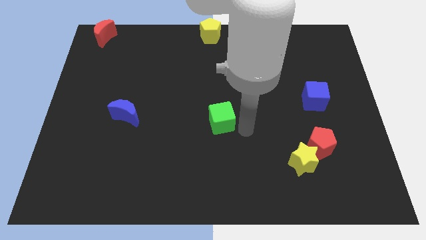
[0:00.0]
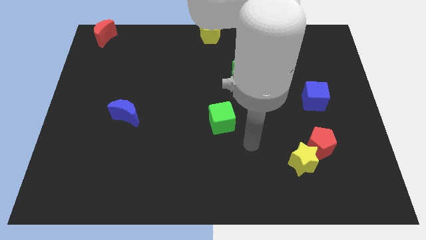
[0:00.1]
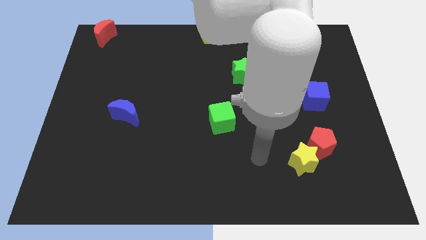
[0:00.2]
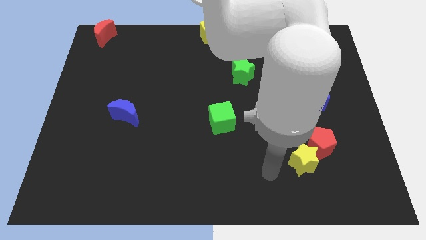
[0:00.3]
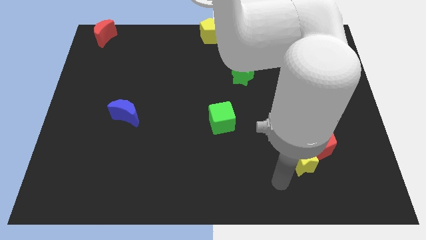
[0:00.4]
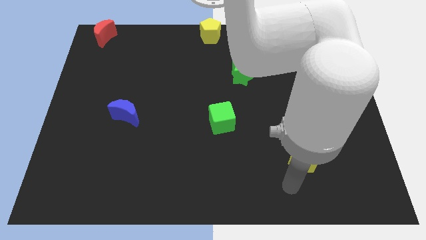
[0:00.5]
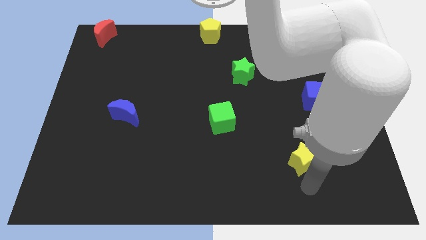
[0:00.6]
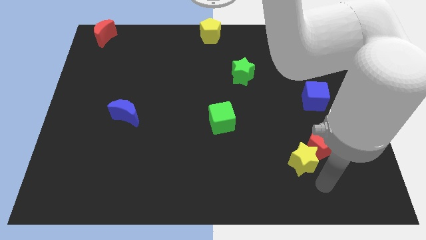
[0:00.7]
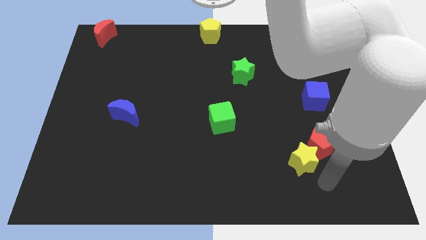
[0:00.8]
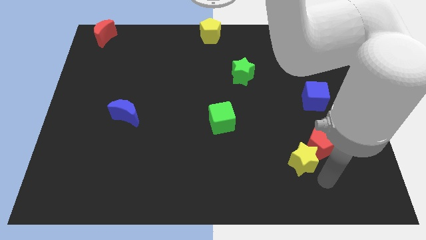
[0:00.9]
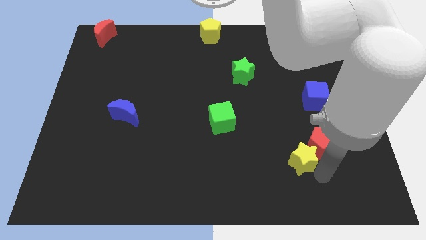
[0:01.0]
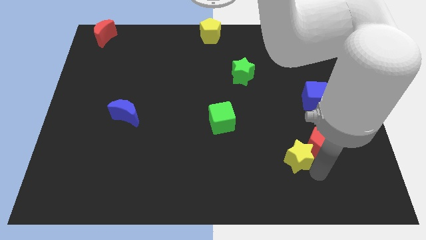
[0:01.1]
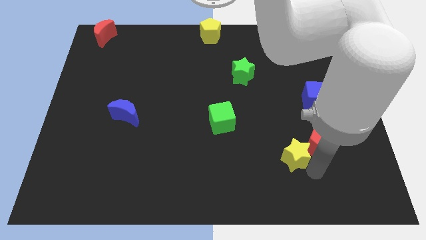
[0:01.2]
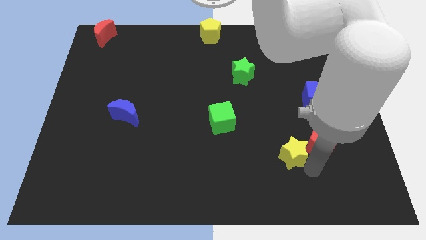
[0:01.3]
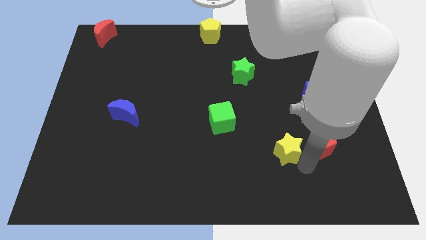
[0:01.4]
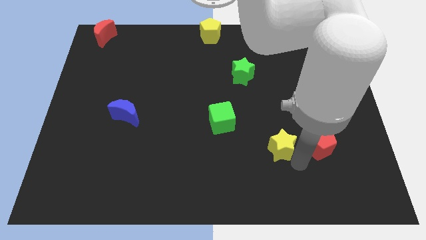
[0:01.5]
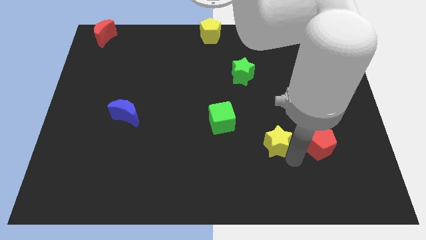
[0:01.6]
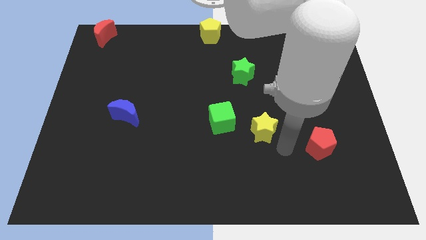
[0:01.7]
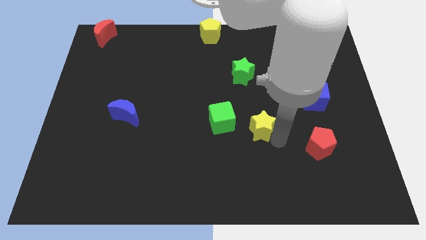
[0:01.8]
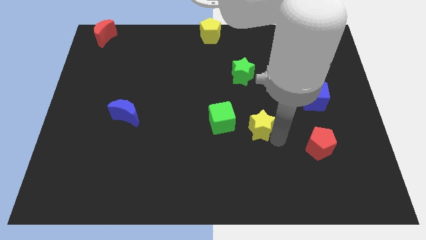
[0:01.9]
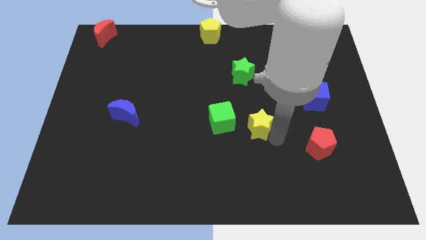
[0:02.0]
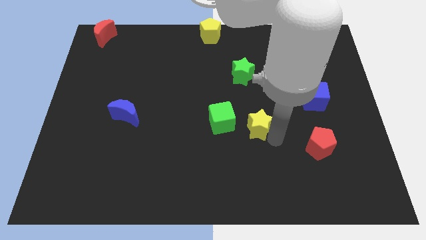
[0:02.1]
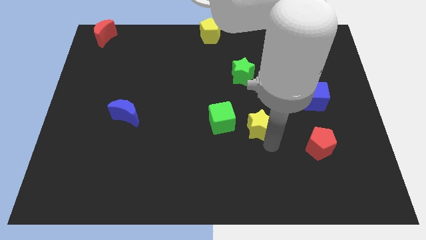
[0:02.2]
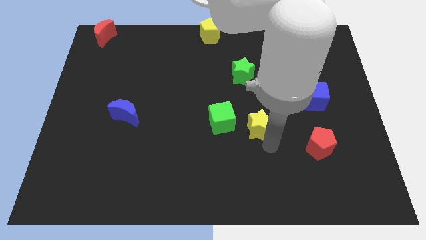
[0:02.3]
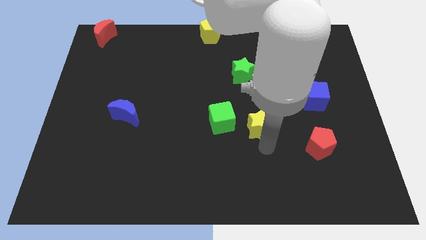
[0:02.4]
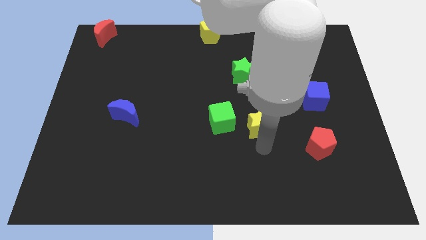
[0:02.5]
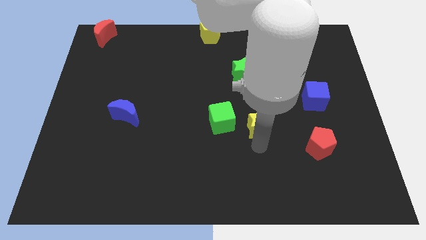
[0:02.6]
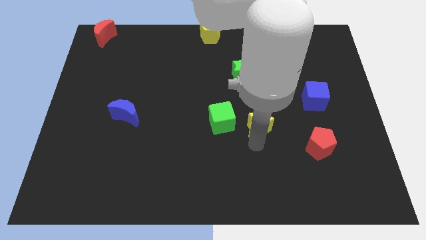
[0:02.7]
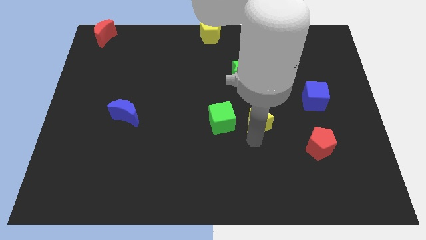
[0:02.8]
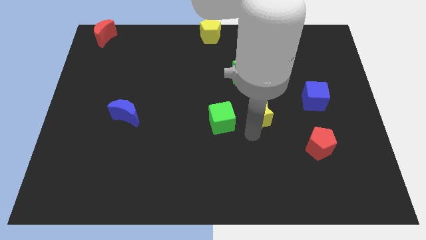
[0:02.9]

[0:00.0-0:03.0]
place the yellow star to the right of the green cube

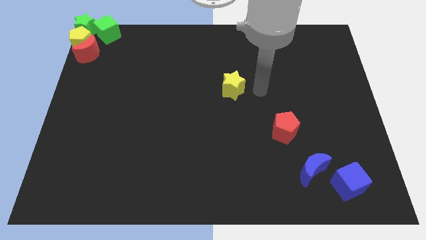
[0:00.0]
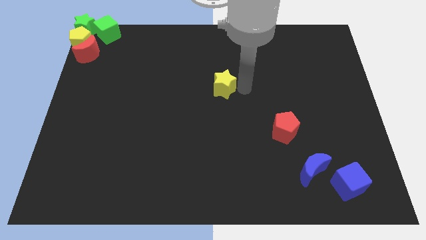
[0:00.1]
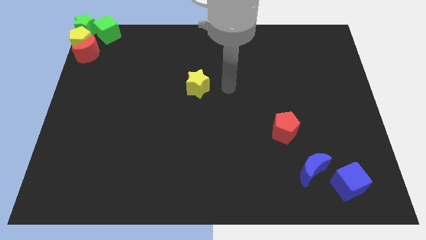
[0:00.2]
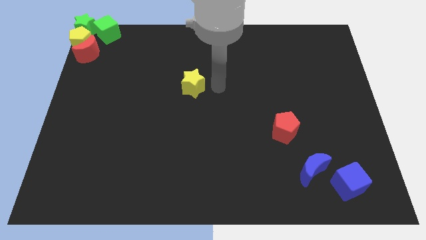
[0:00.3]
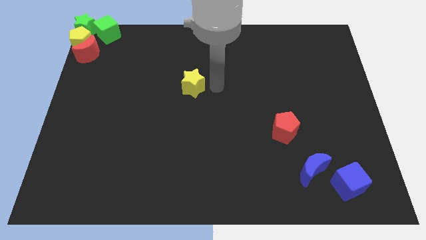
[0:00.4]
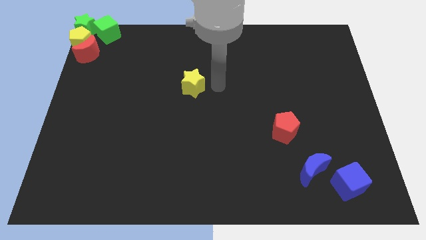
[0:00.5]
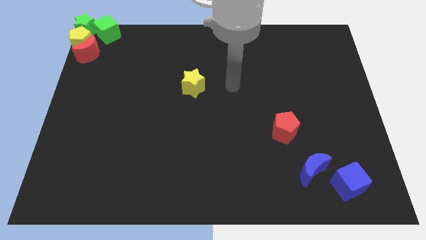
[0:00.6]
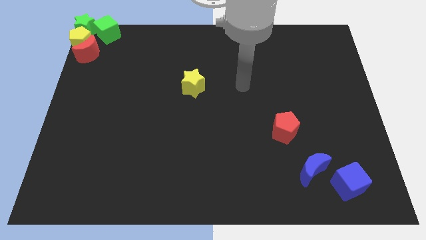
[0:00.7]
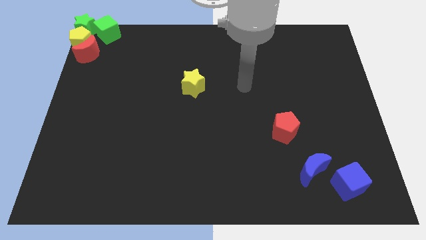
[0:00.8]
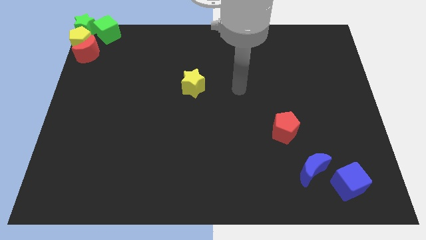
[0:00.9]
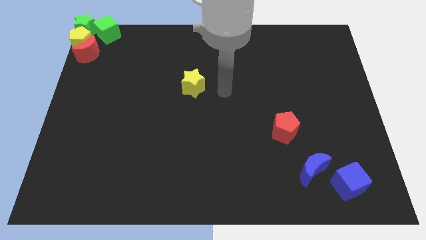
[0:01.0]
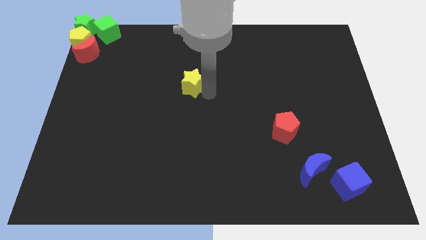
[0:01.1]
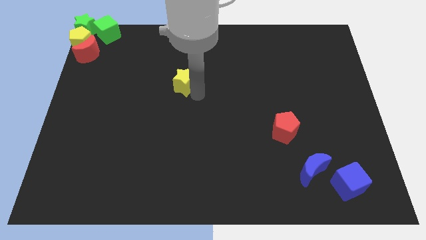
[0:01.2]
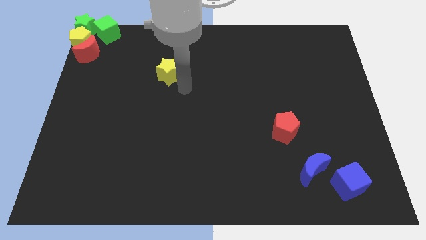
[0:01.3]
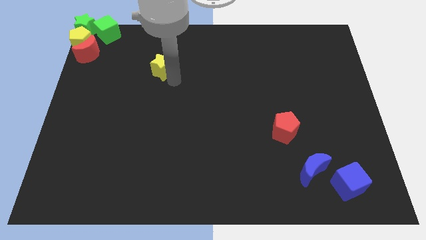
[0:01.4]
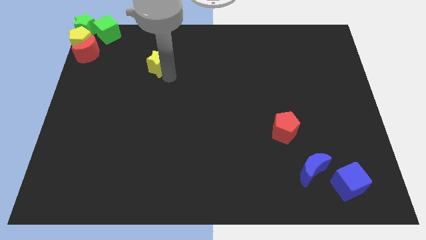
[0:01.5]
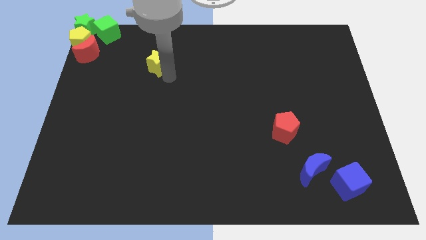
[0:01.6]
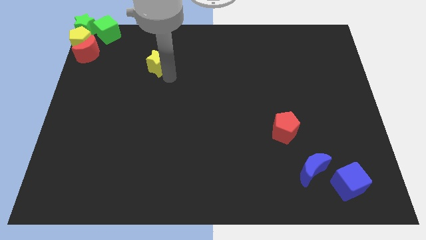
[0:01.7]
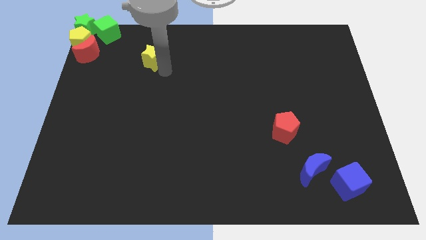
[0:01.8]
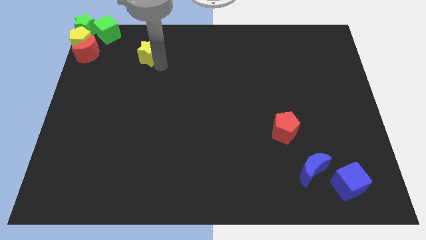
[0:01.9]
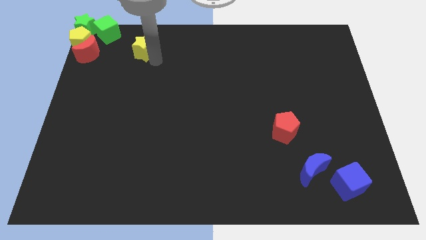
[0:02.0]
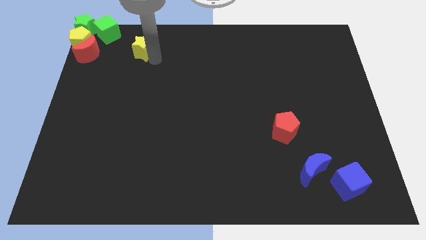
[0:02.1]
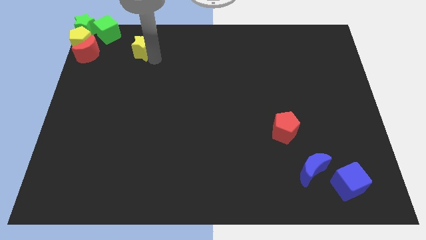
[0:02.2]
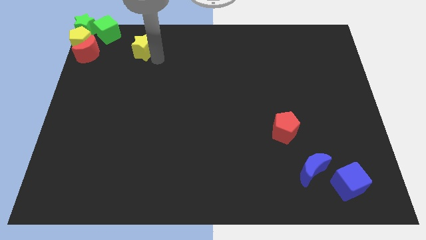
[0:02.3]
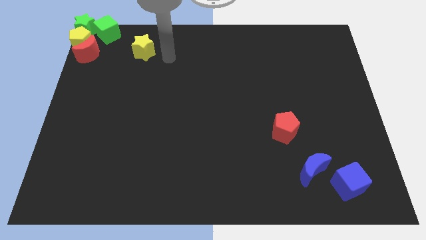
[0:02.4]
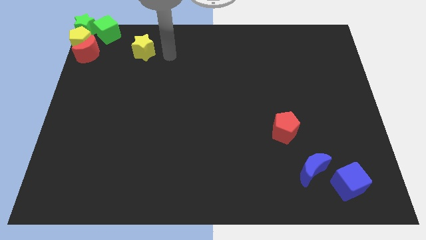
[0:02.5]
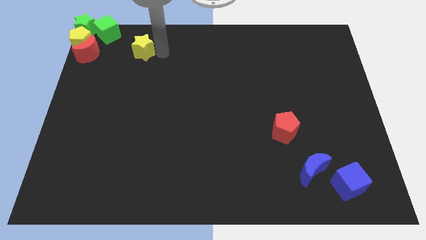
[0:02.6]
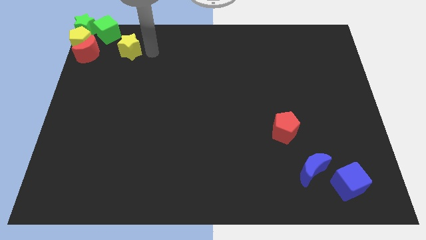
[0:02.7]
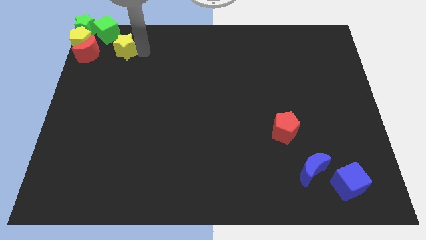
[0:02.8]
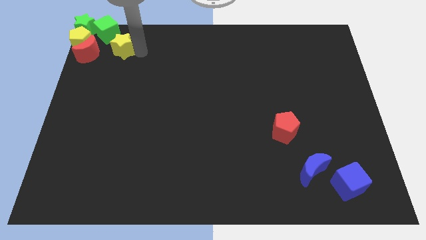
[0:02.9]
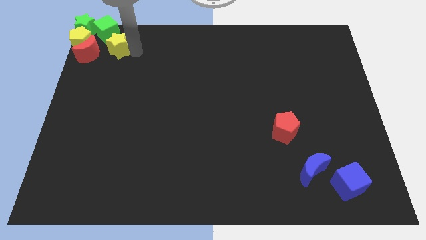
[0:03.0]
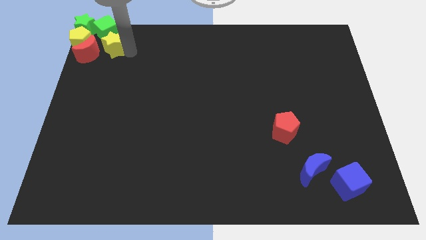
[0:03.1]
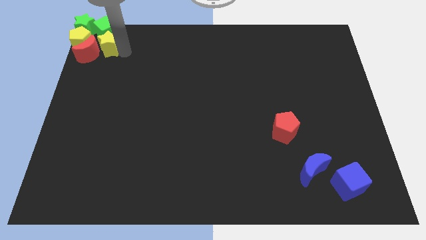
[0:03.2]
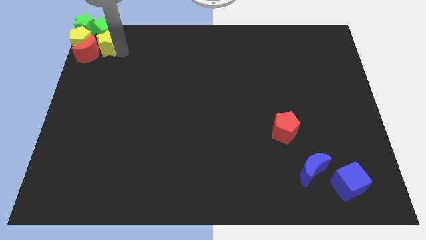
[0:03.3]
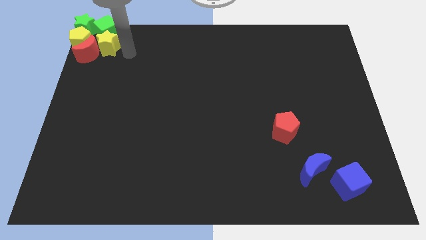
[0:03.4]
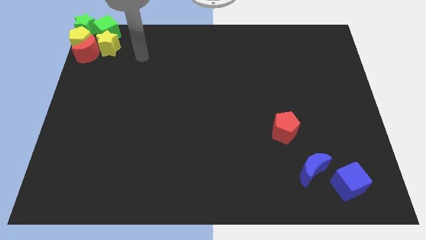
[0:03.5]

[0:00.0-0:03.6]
move the yellow star into the group of blocks

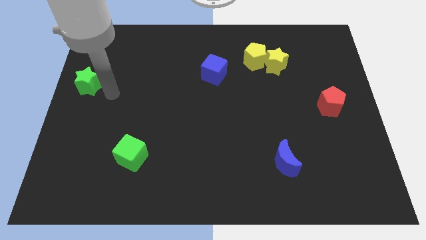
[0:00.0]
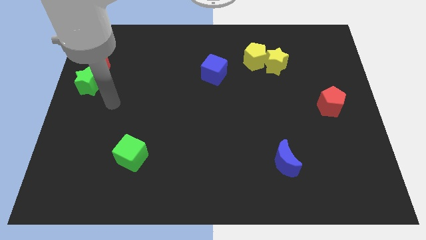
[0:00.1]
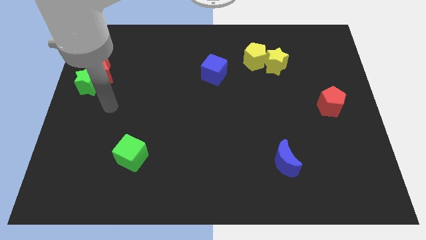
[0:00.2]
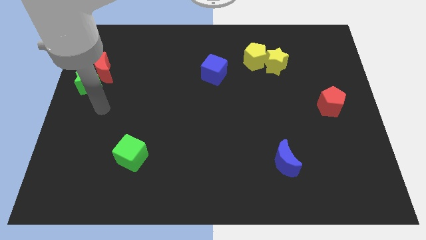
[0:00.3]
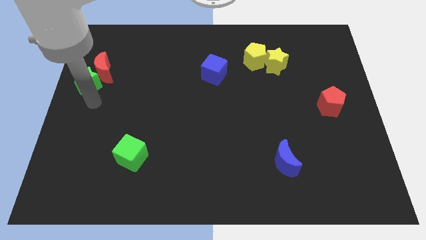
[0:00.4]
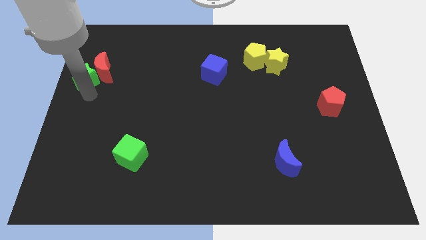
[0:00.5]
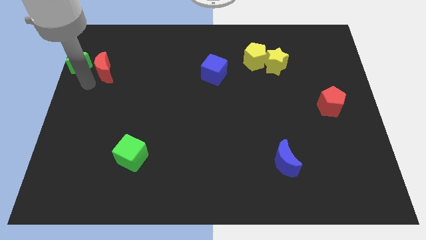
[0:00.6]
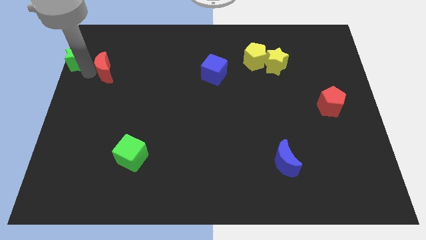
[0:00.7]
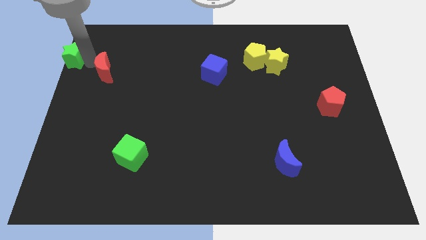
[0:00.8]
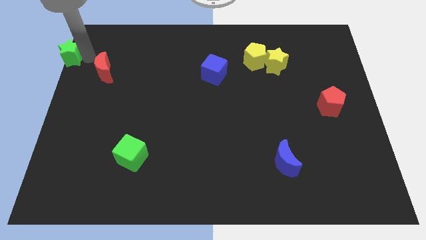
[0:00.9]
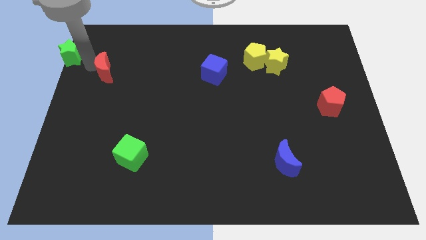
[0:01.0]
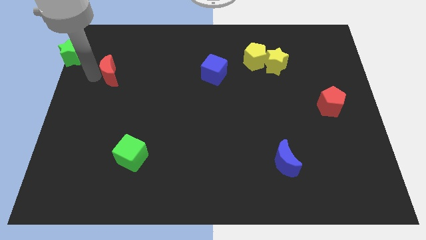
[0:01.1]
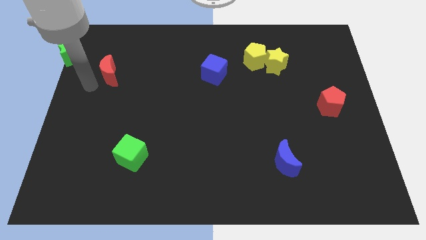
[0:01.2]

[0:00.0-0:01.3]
move the green star to the top left side of the board

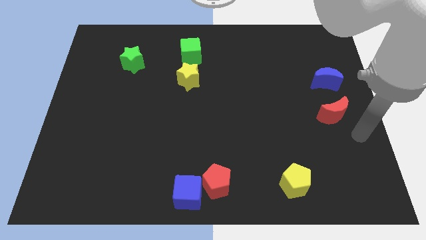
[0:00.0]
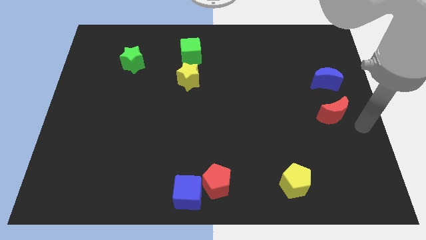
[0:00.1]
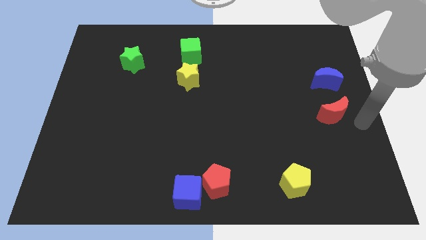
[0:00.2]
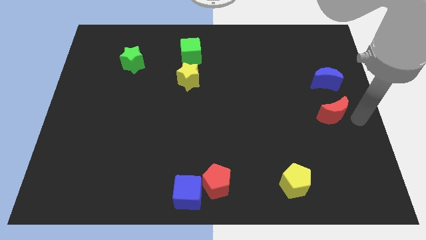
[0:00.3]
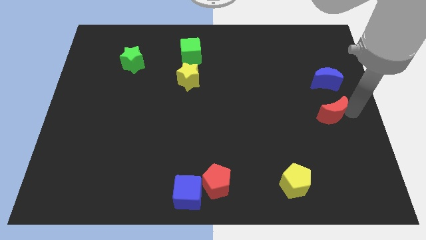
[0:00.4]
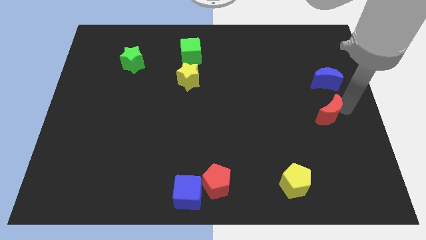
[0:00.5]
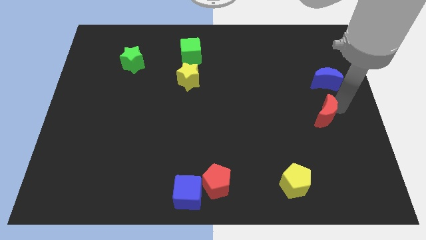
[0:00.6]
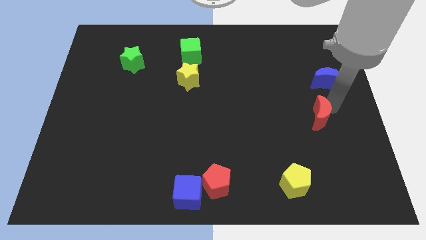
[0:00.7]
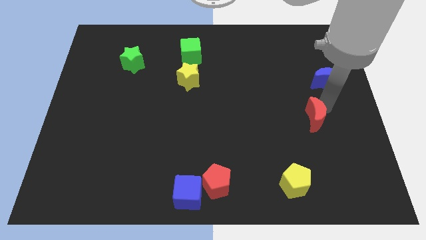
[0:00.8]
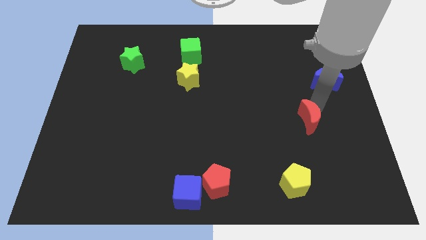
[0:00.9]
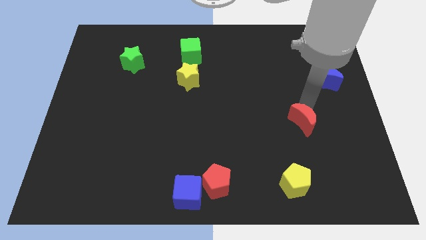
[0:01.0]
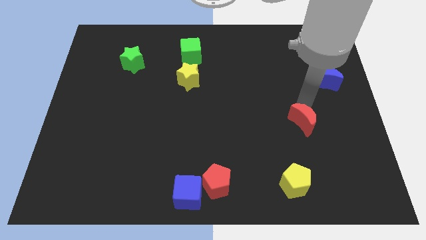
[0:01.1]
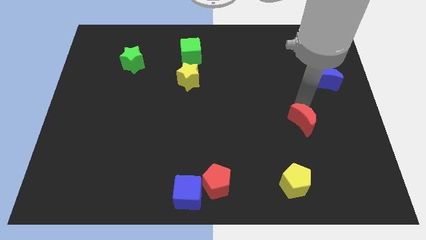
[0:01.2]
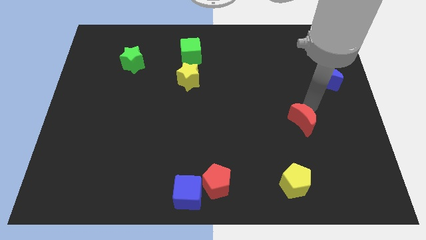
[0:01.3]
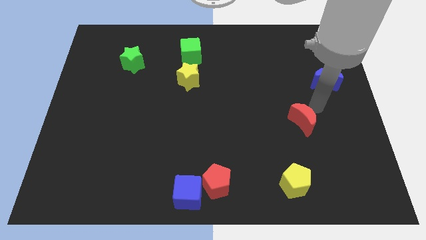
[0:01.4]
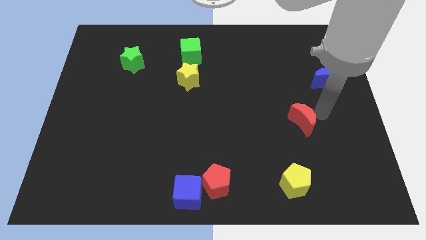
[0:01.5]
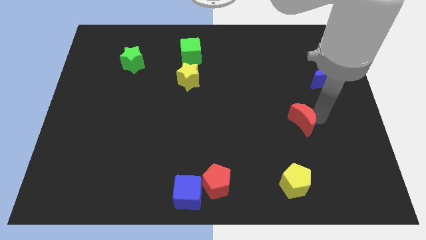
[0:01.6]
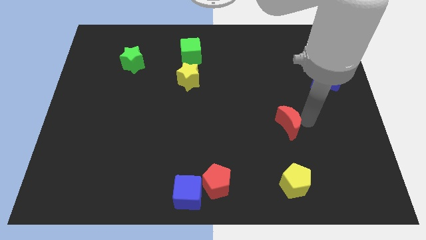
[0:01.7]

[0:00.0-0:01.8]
push the red crescent to the top of the yellow pentagon
